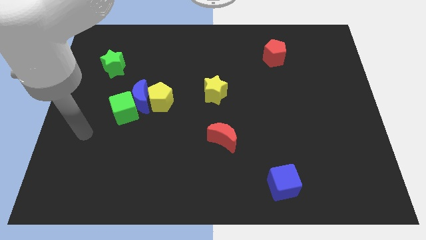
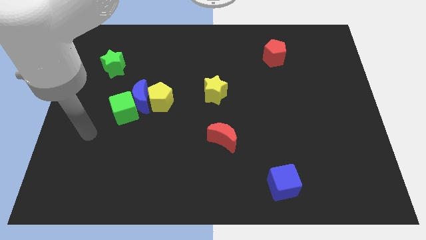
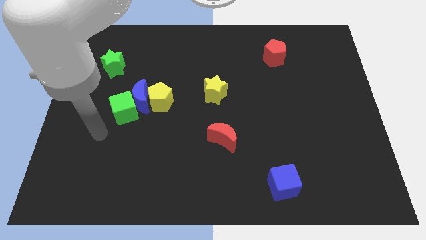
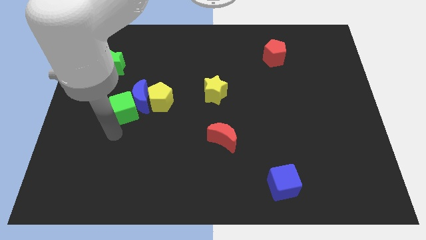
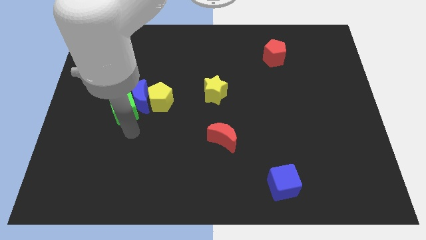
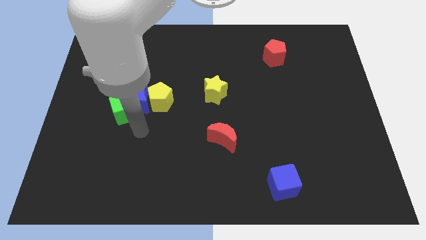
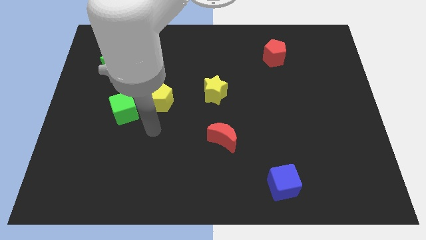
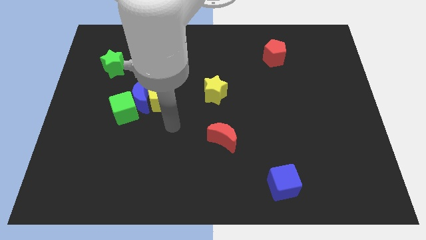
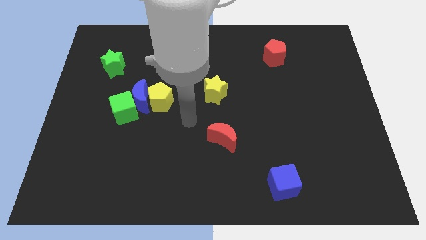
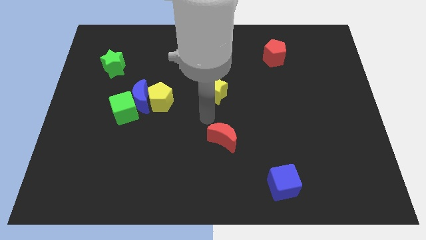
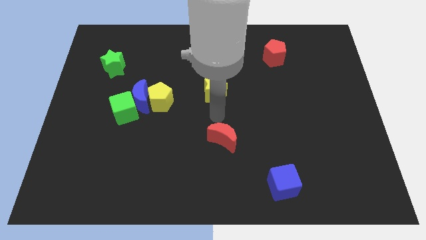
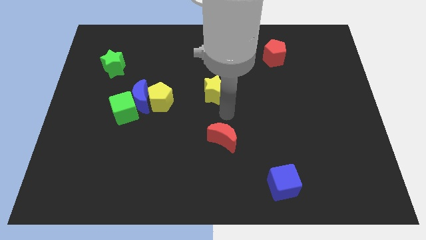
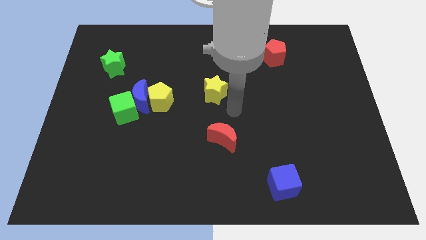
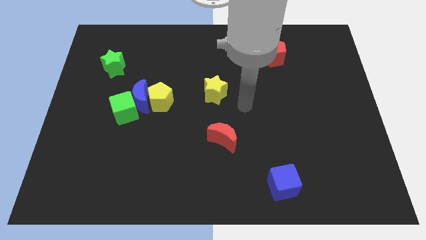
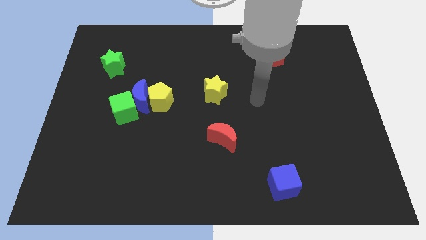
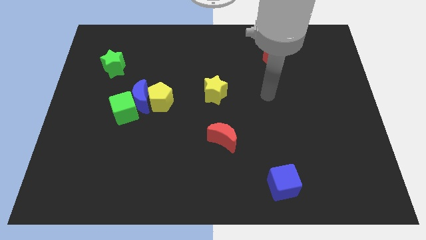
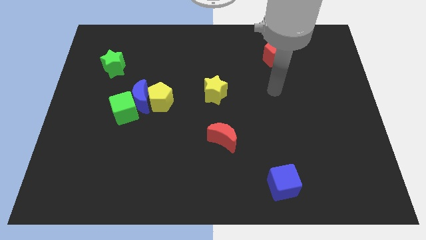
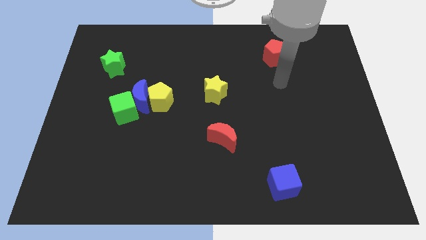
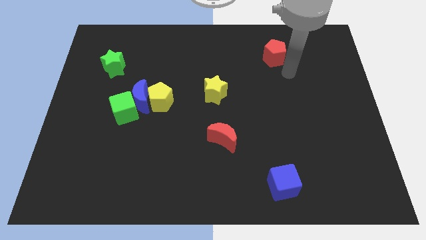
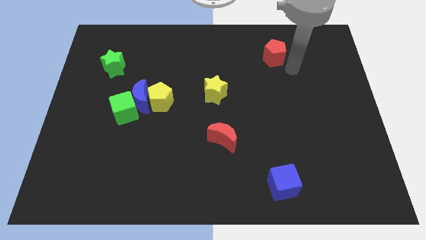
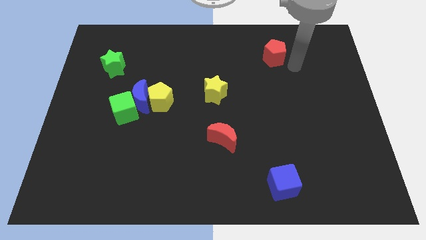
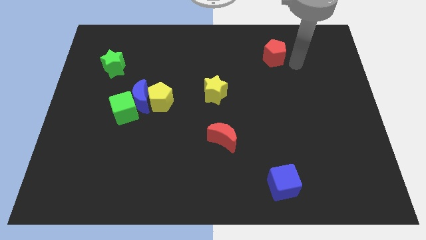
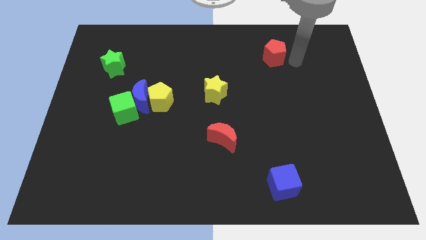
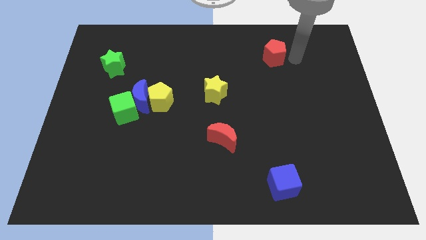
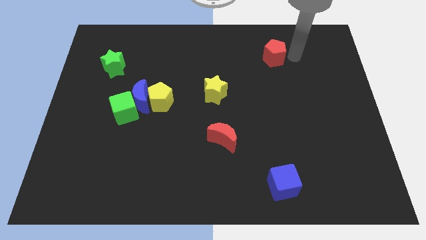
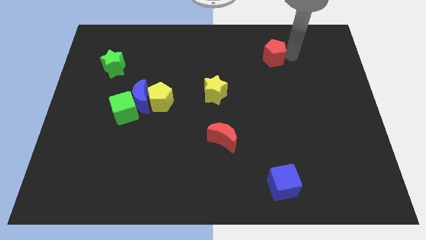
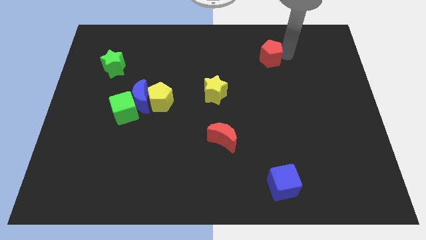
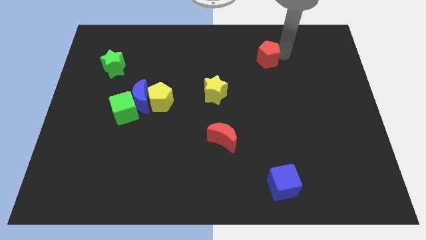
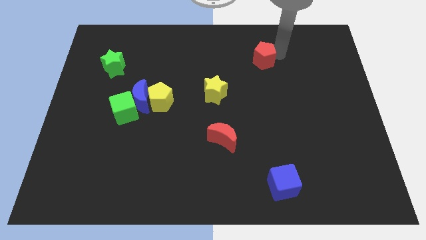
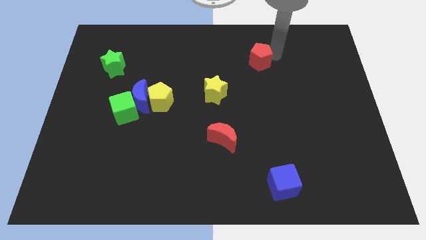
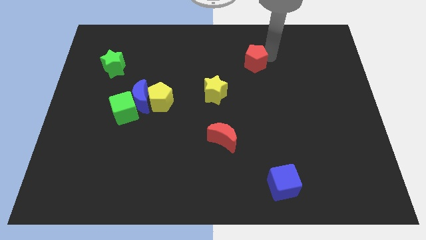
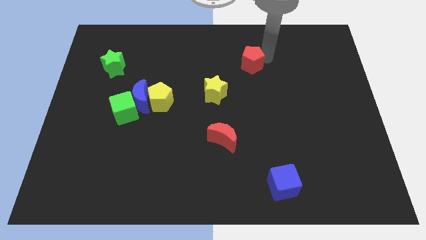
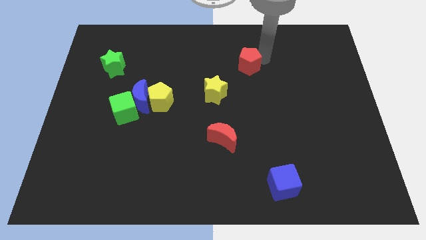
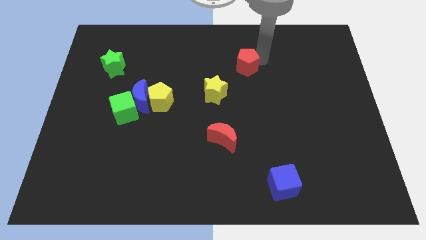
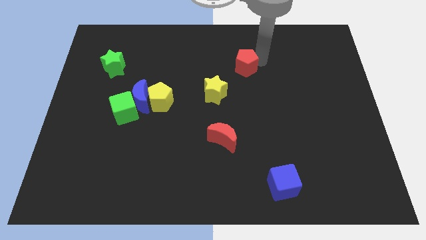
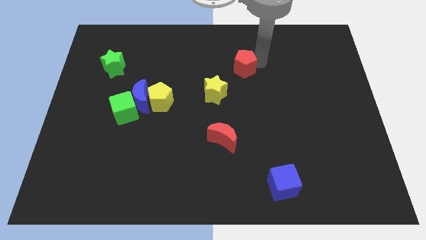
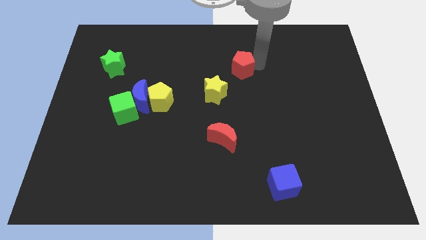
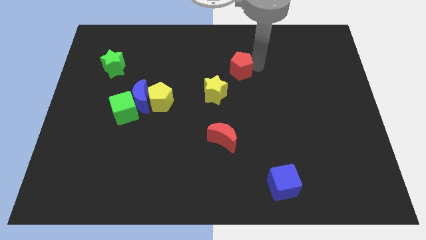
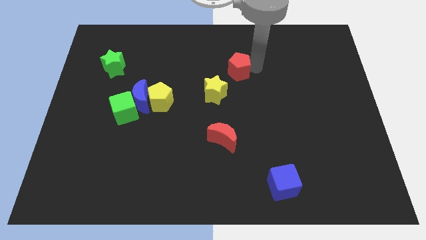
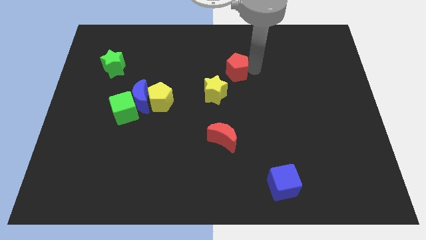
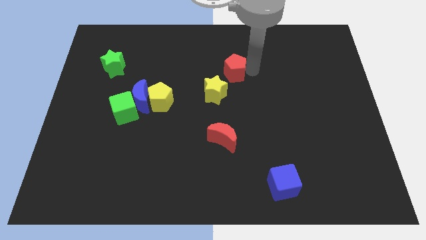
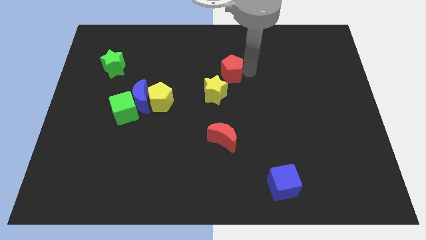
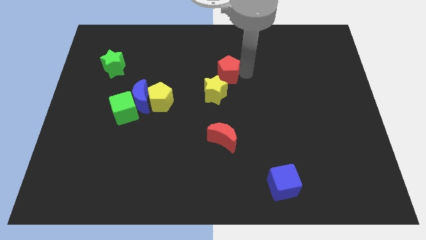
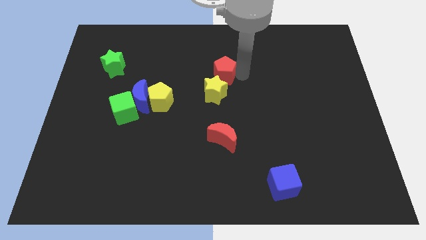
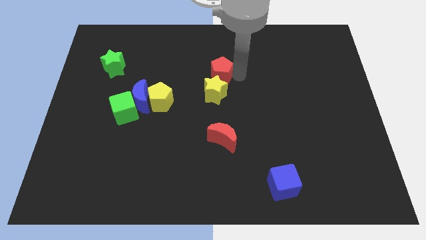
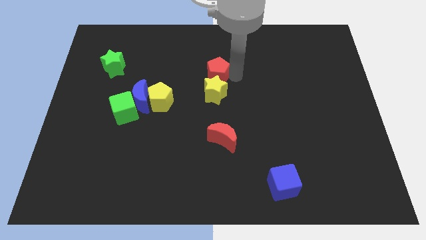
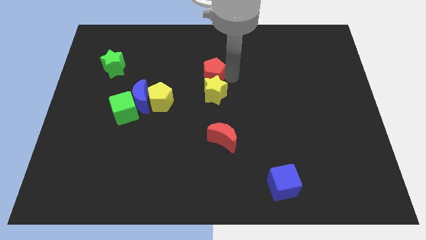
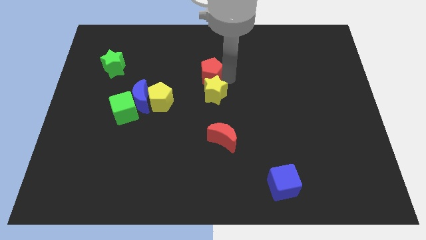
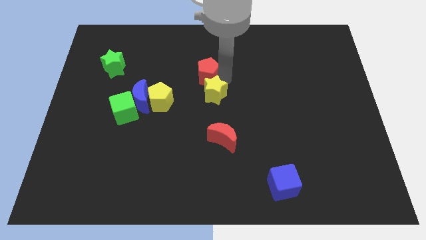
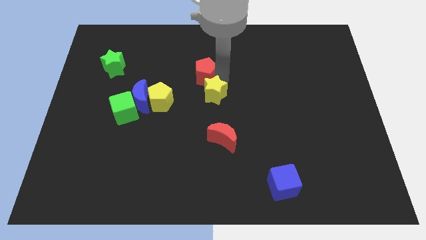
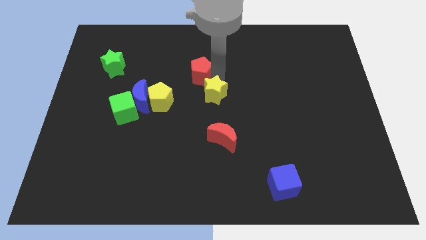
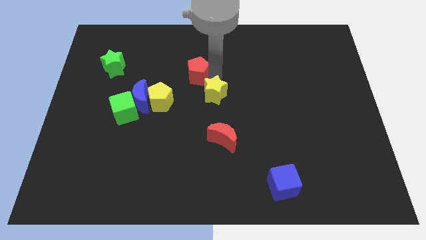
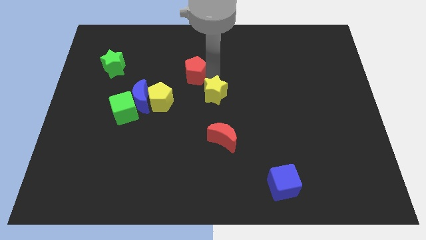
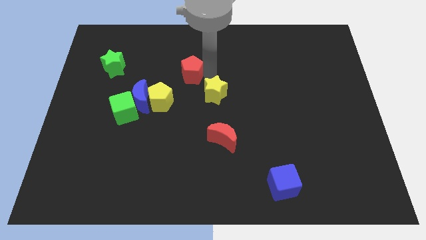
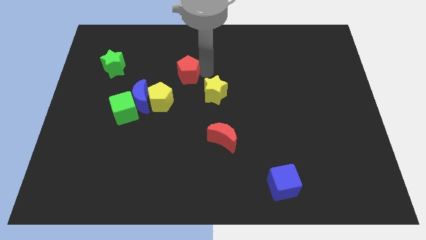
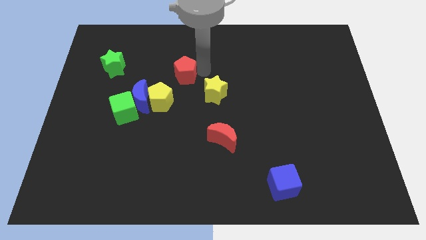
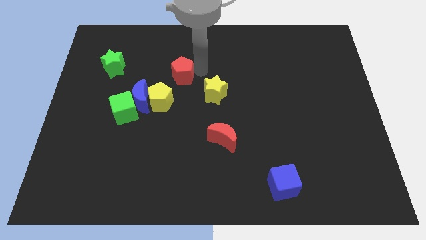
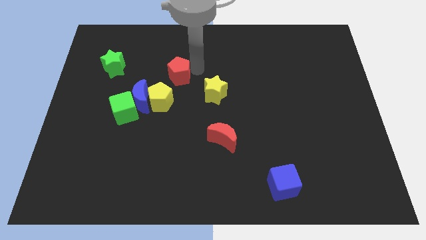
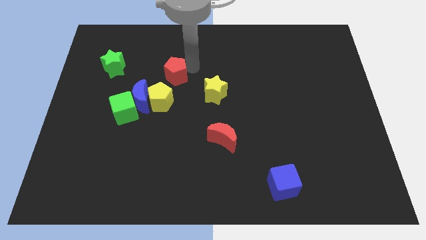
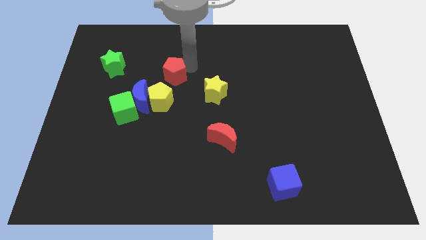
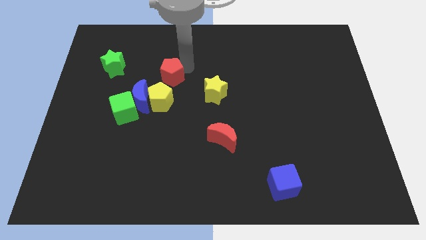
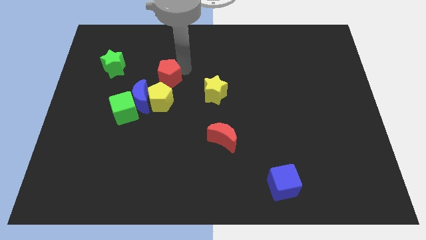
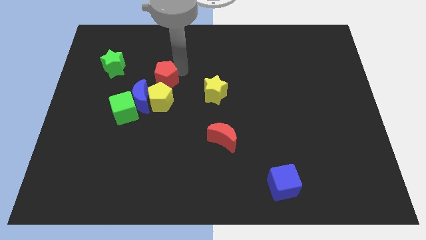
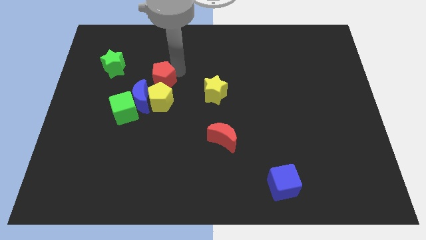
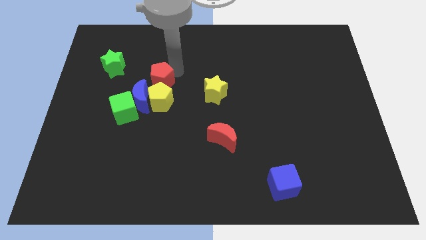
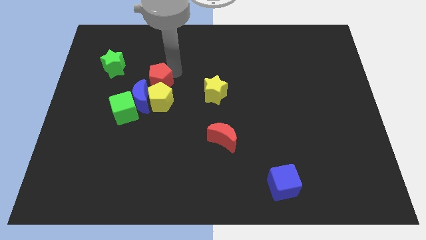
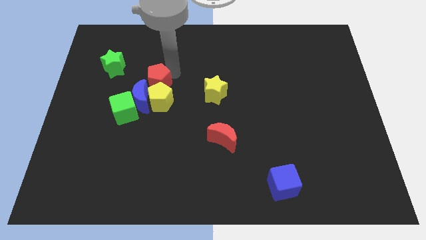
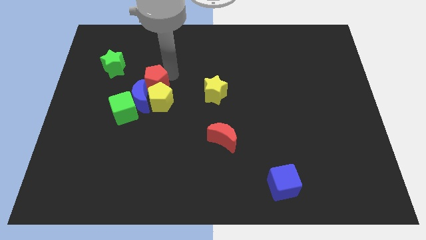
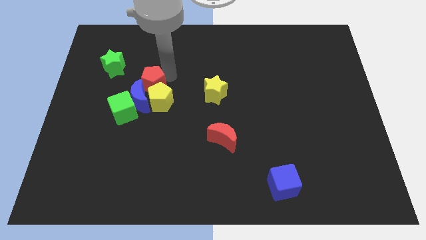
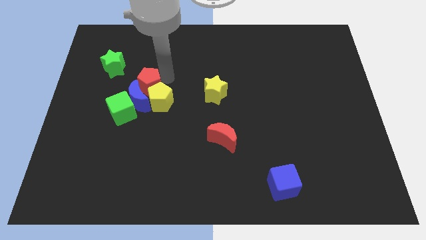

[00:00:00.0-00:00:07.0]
move the red pentagon towards the blue moon

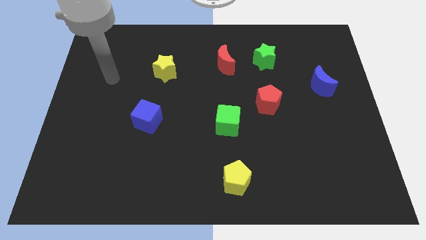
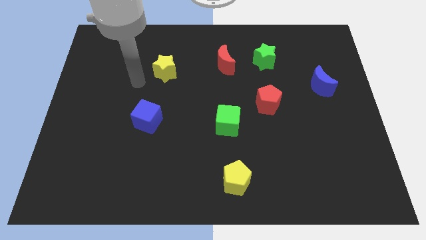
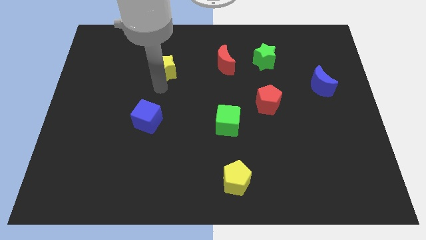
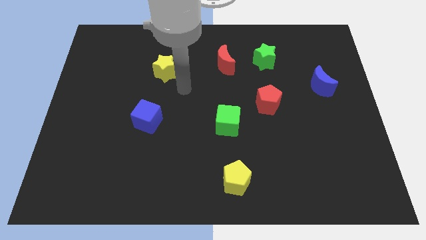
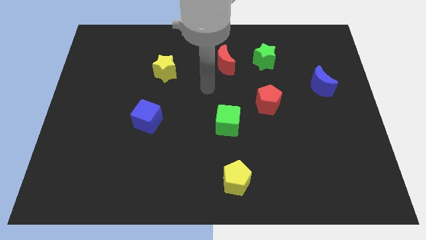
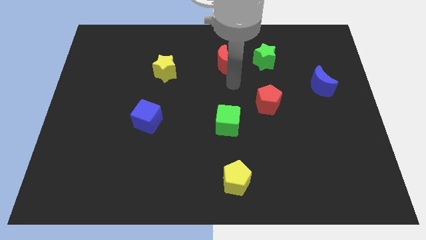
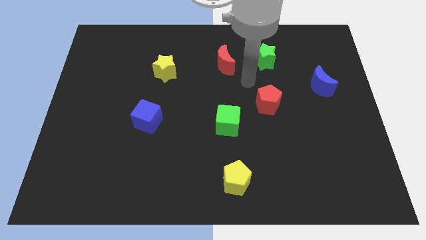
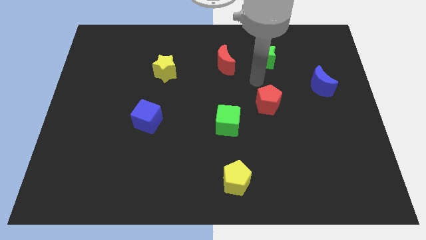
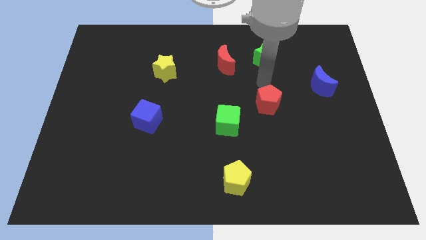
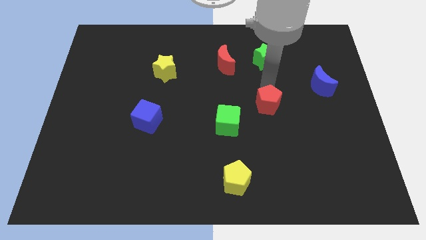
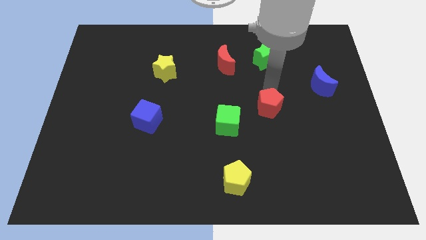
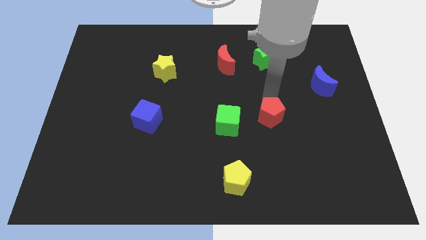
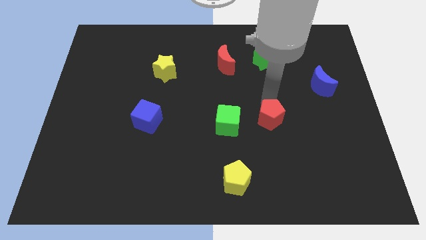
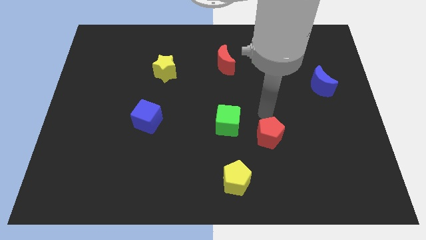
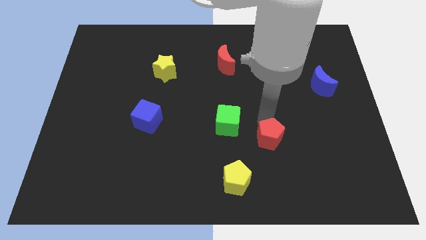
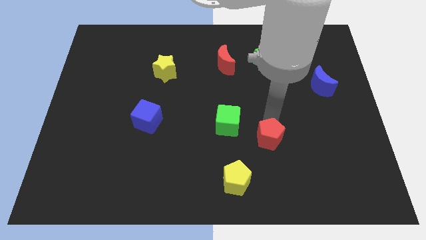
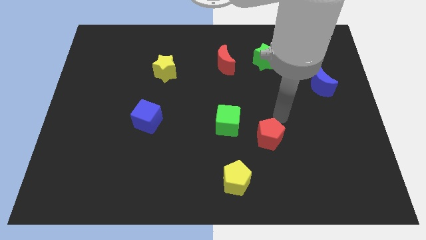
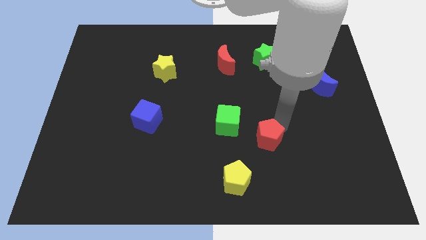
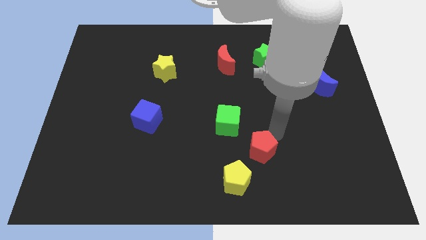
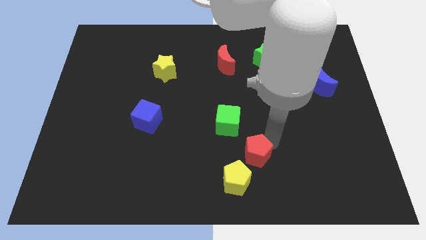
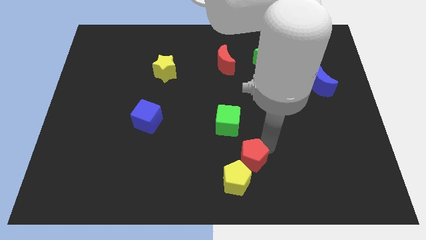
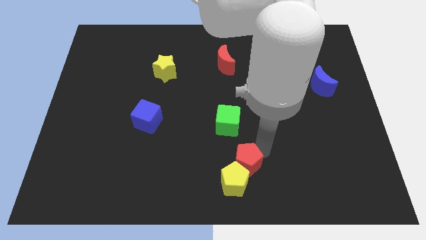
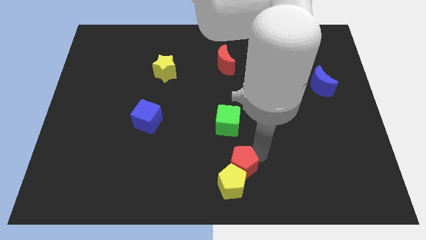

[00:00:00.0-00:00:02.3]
put the red pentagon towards the yellow pentagon
